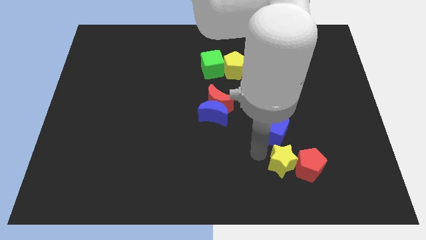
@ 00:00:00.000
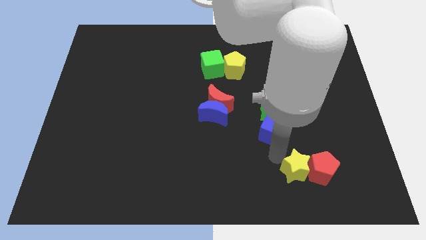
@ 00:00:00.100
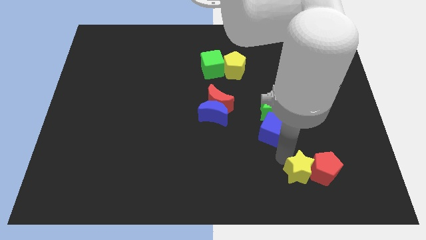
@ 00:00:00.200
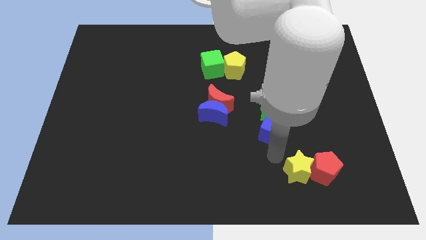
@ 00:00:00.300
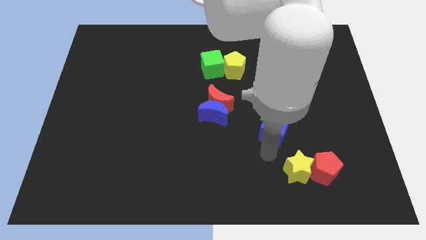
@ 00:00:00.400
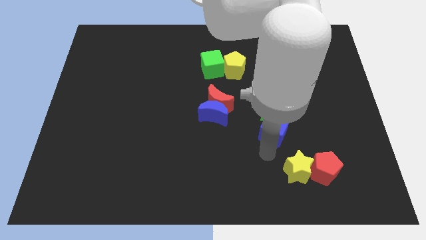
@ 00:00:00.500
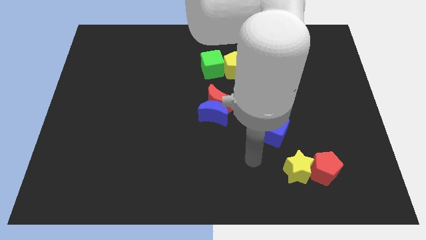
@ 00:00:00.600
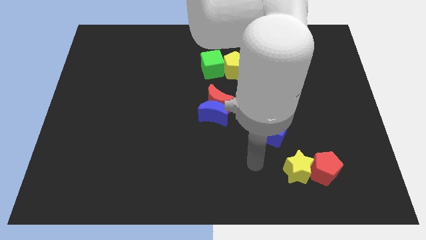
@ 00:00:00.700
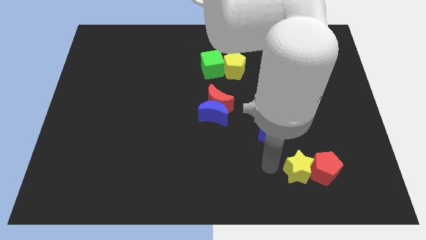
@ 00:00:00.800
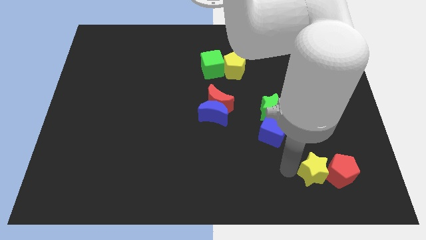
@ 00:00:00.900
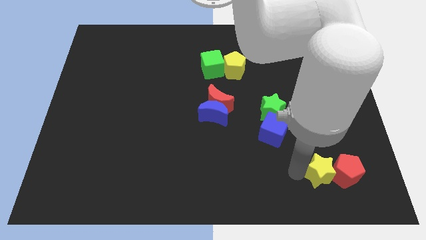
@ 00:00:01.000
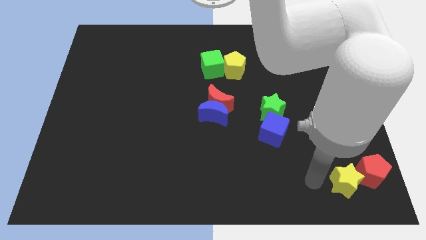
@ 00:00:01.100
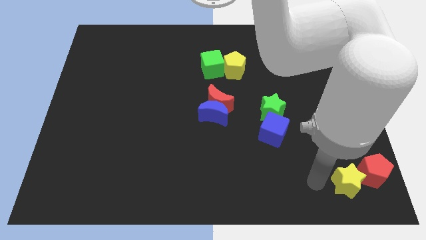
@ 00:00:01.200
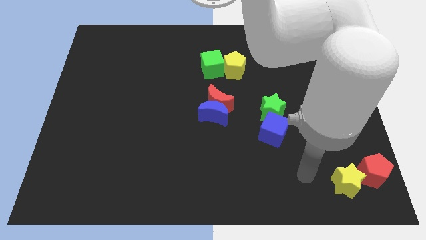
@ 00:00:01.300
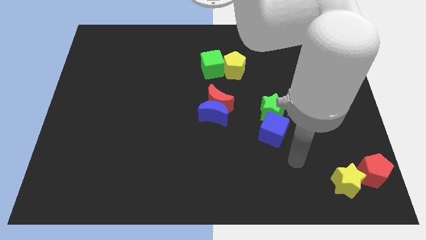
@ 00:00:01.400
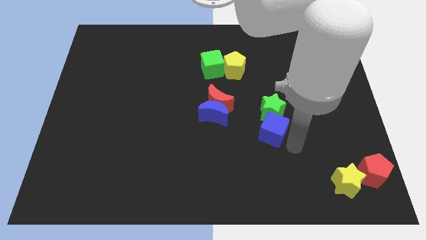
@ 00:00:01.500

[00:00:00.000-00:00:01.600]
push the yellow star into the red pentagon

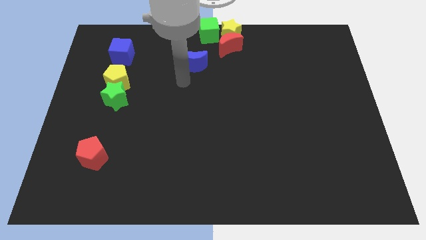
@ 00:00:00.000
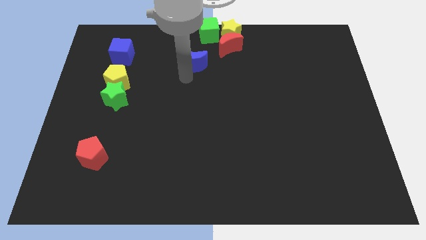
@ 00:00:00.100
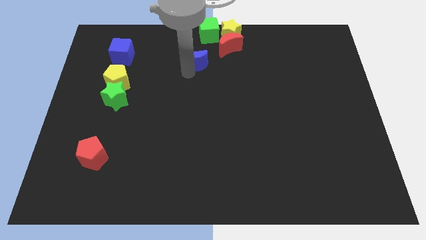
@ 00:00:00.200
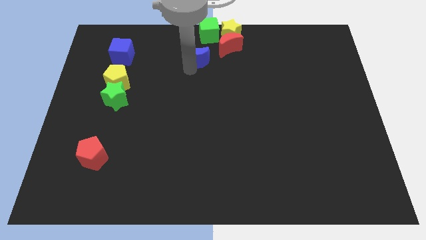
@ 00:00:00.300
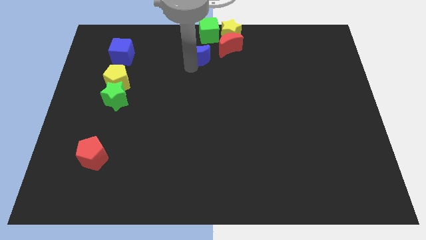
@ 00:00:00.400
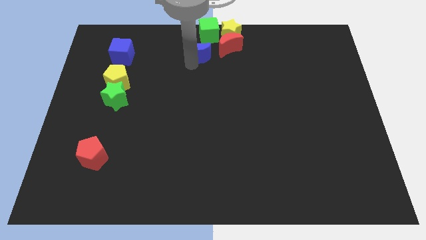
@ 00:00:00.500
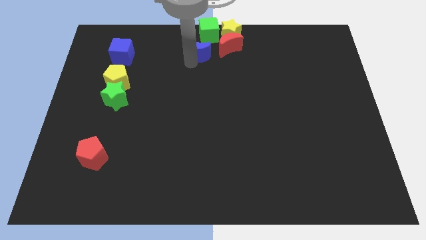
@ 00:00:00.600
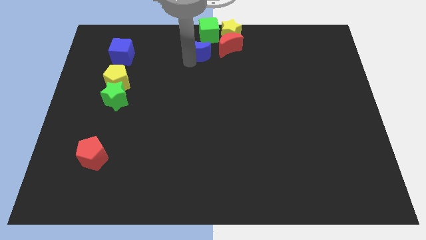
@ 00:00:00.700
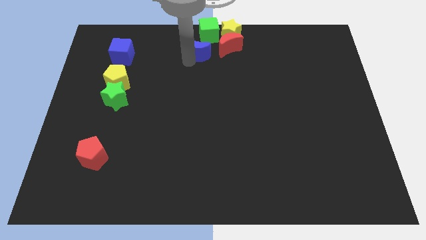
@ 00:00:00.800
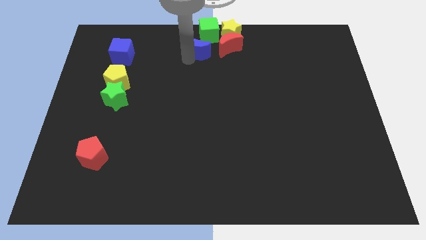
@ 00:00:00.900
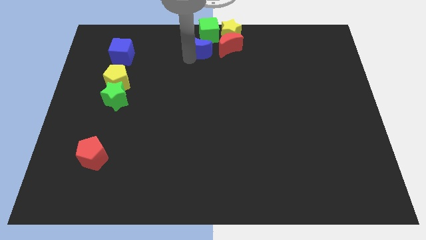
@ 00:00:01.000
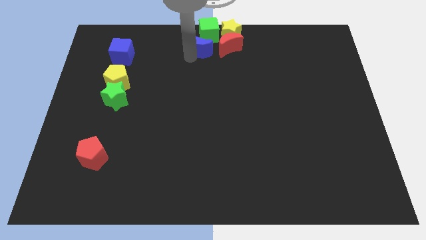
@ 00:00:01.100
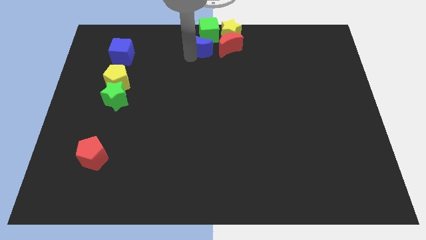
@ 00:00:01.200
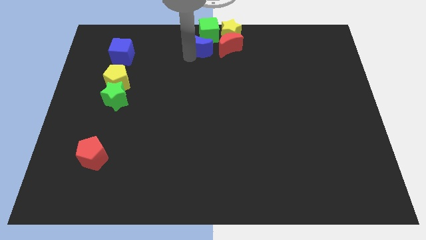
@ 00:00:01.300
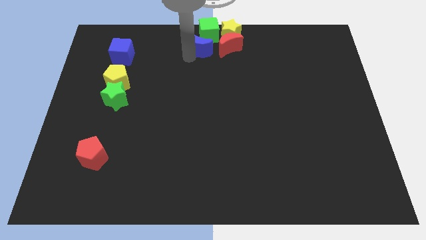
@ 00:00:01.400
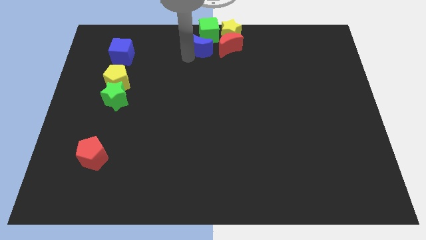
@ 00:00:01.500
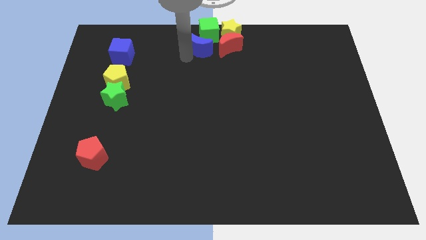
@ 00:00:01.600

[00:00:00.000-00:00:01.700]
push the blue crescent towards the diagonal bottom left corner of the green cube

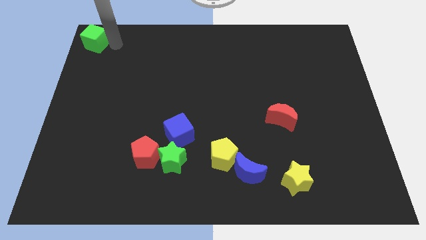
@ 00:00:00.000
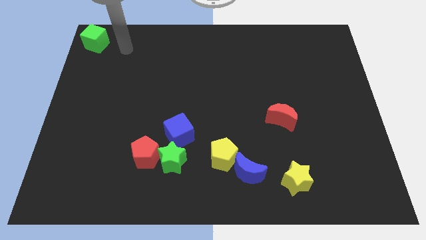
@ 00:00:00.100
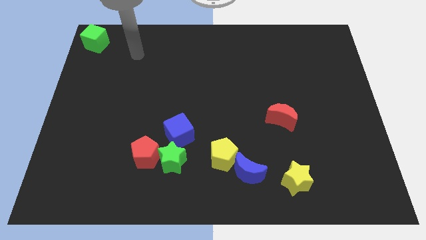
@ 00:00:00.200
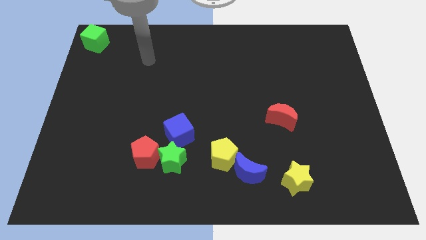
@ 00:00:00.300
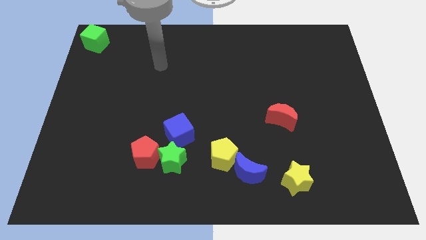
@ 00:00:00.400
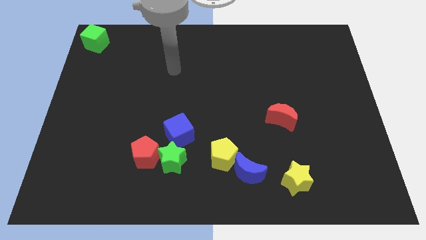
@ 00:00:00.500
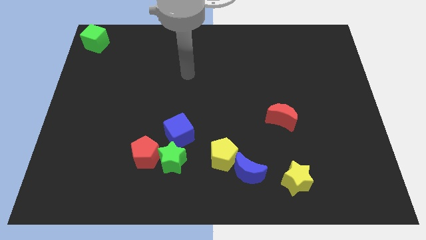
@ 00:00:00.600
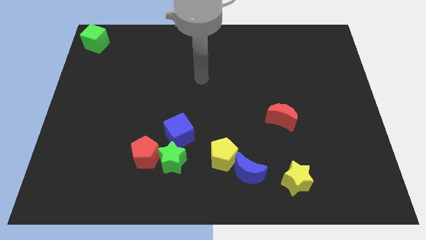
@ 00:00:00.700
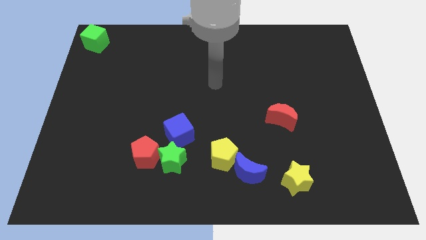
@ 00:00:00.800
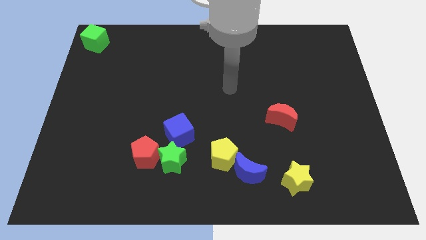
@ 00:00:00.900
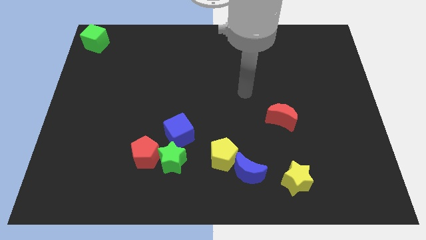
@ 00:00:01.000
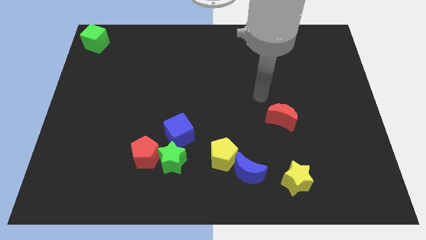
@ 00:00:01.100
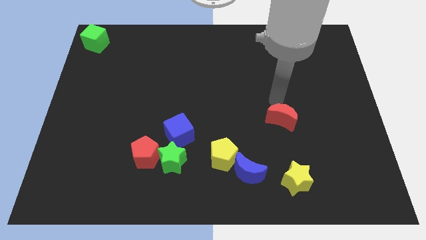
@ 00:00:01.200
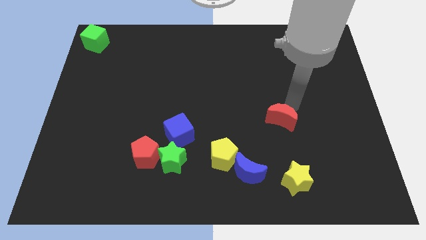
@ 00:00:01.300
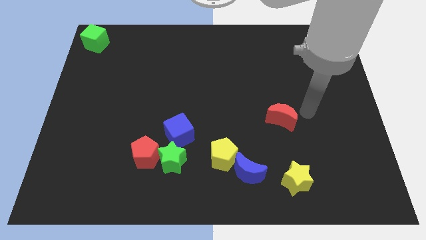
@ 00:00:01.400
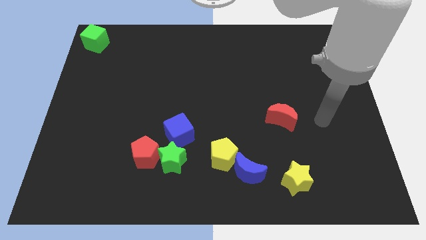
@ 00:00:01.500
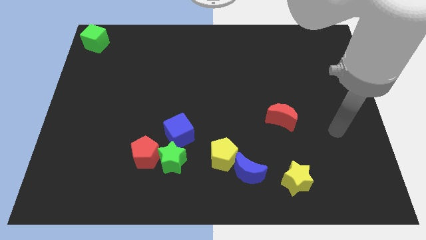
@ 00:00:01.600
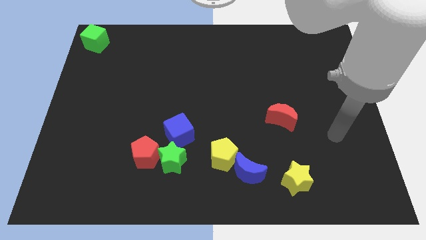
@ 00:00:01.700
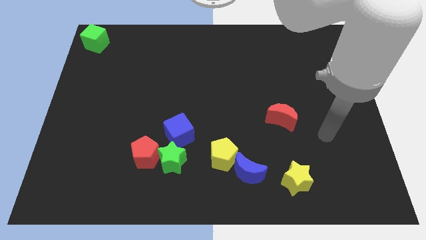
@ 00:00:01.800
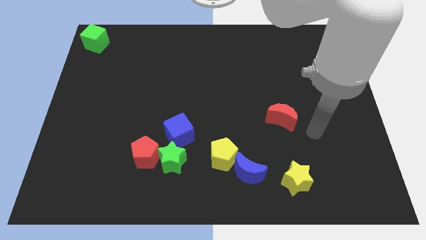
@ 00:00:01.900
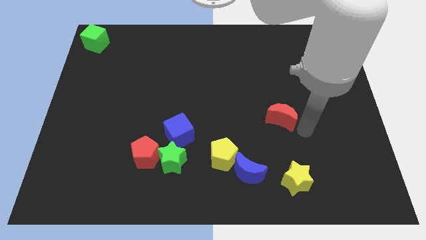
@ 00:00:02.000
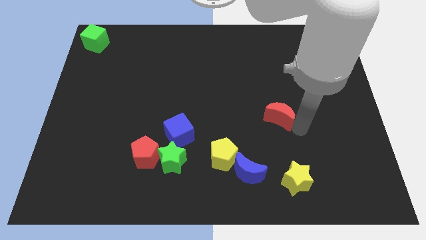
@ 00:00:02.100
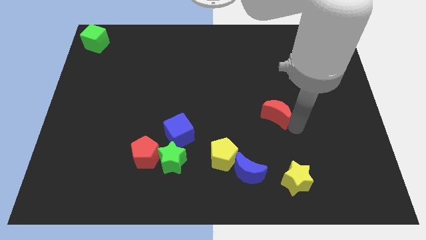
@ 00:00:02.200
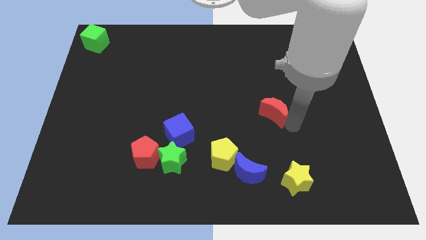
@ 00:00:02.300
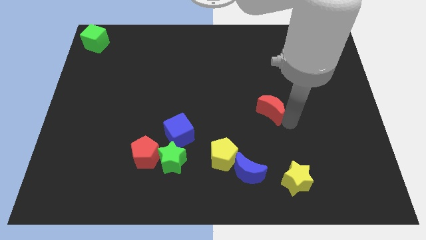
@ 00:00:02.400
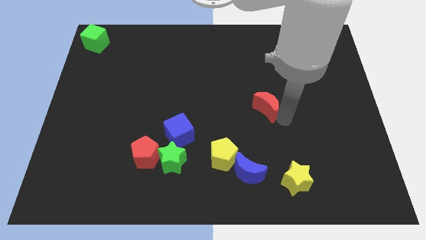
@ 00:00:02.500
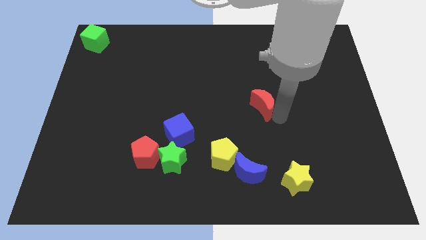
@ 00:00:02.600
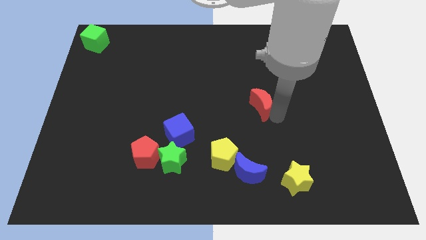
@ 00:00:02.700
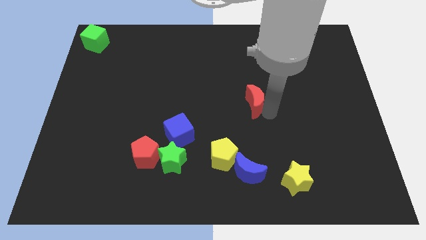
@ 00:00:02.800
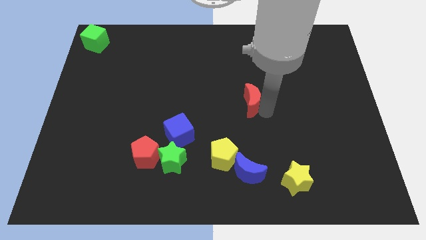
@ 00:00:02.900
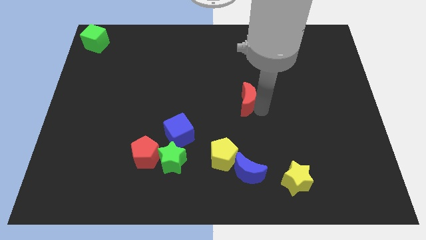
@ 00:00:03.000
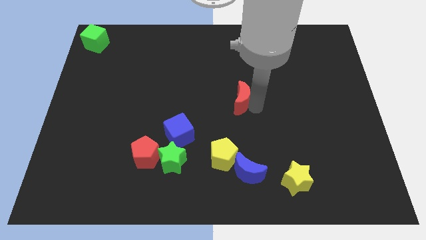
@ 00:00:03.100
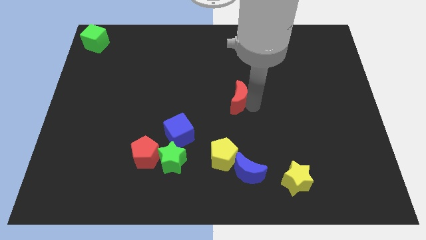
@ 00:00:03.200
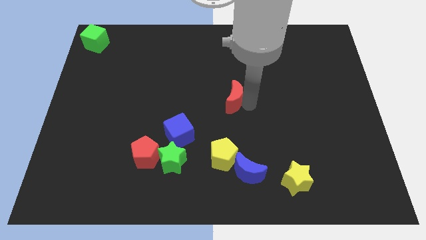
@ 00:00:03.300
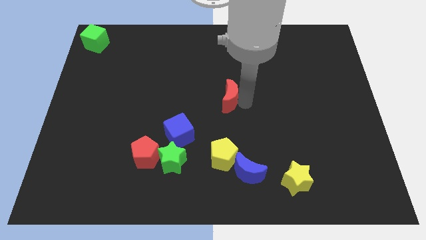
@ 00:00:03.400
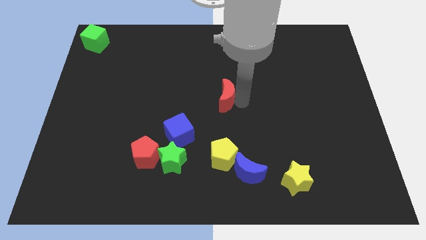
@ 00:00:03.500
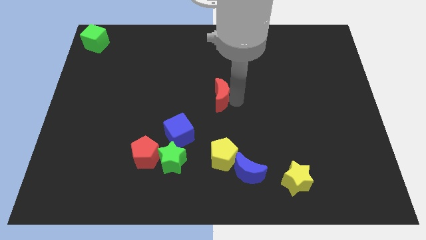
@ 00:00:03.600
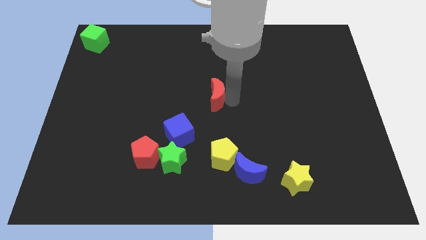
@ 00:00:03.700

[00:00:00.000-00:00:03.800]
place the red crescent at the center of the board

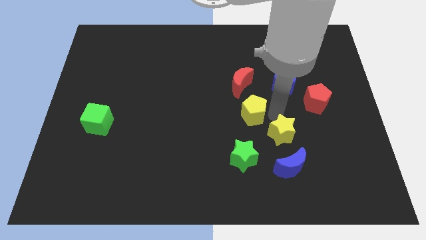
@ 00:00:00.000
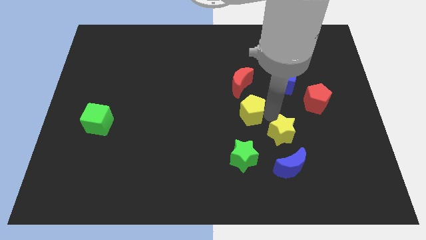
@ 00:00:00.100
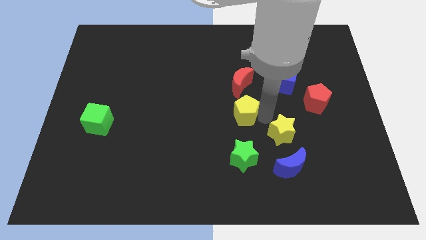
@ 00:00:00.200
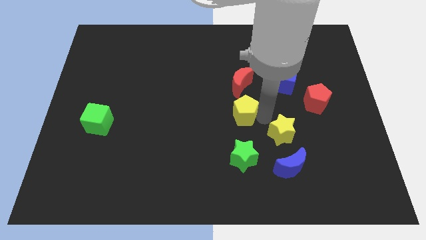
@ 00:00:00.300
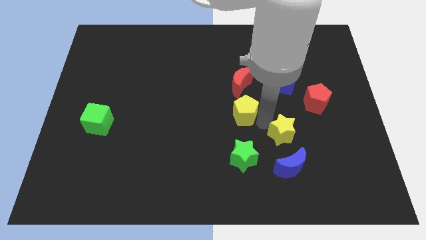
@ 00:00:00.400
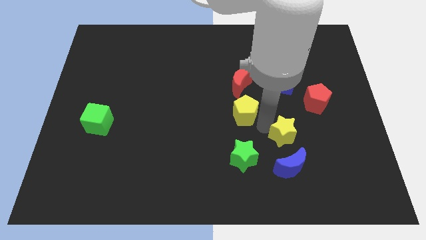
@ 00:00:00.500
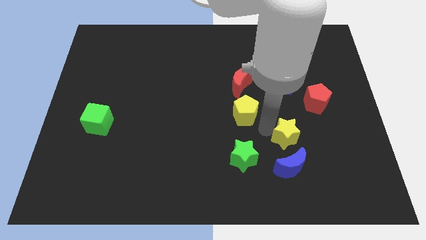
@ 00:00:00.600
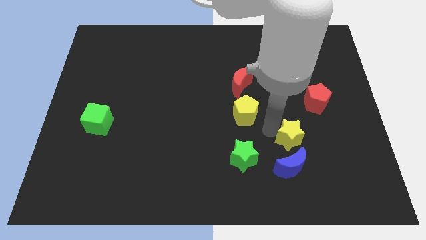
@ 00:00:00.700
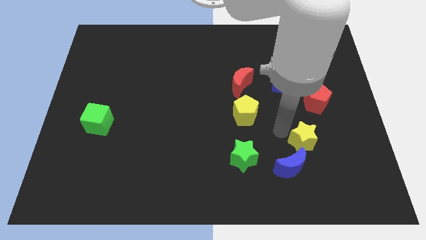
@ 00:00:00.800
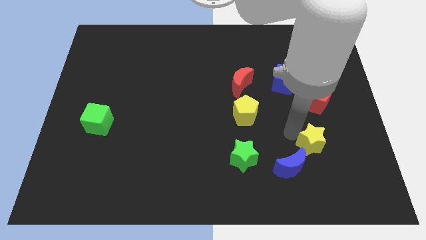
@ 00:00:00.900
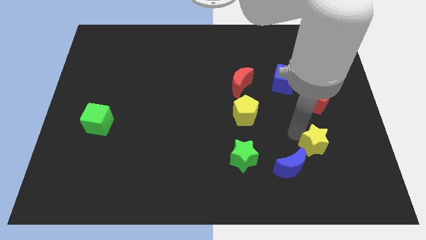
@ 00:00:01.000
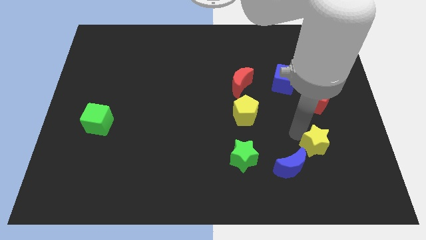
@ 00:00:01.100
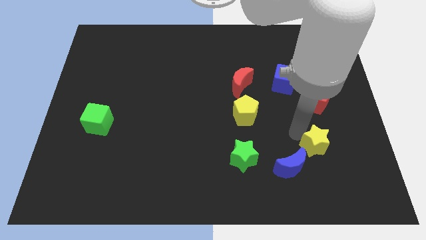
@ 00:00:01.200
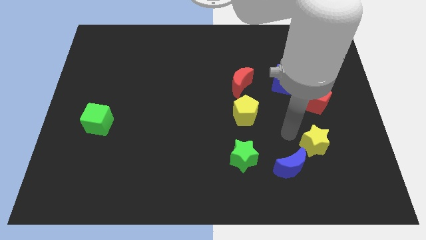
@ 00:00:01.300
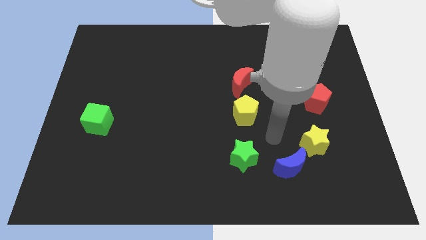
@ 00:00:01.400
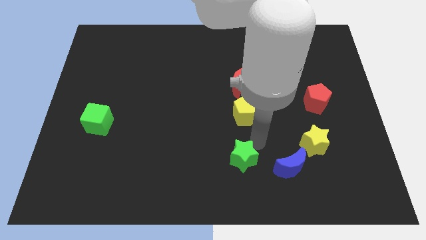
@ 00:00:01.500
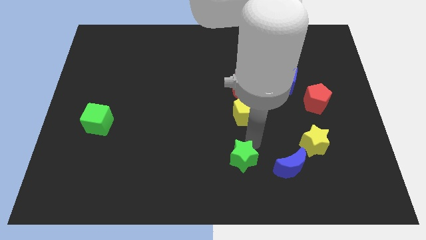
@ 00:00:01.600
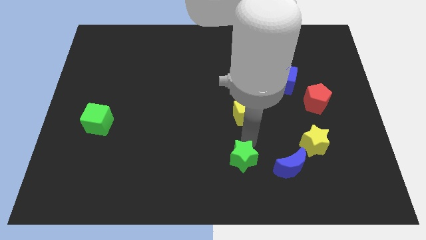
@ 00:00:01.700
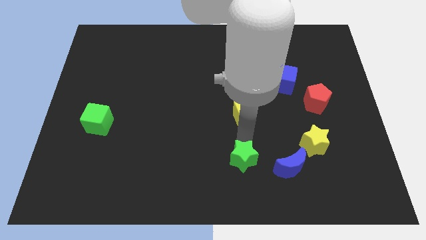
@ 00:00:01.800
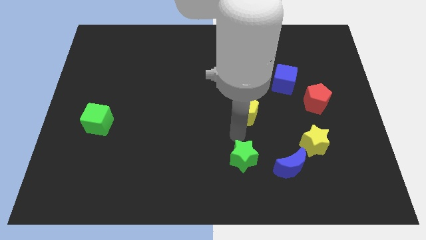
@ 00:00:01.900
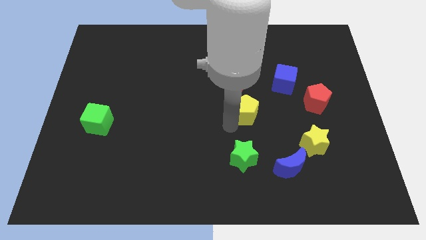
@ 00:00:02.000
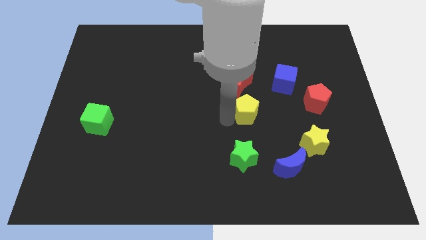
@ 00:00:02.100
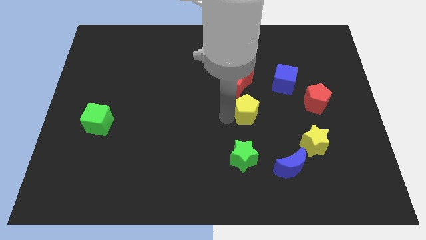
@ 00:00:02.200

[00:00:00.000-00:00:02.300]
separate yellow star from the yellow pentagon
